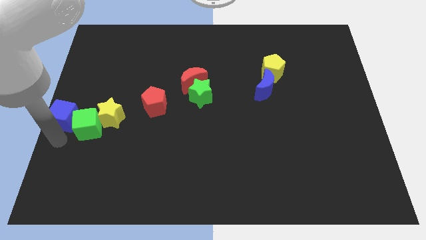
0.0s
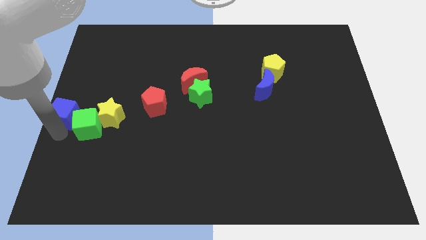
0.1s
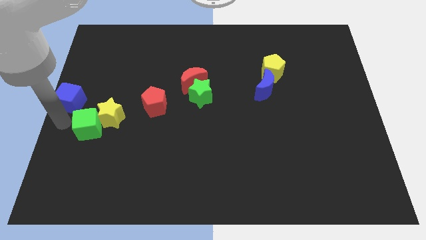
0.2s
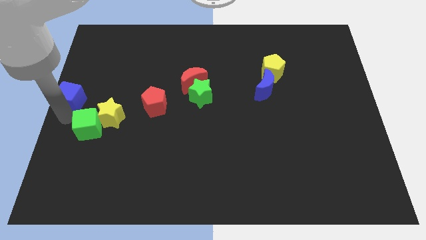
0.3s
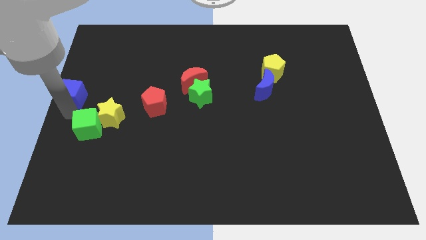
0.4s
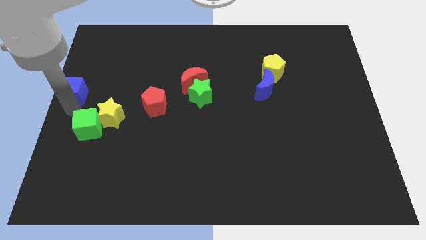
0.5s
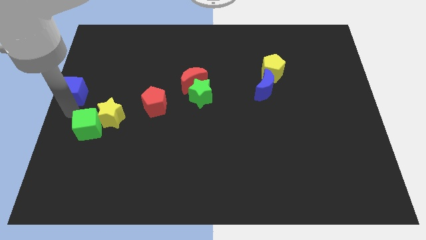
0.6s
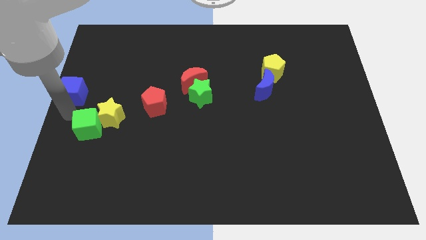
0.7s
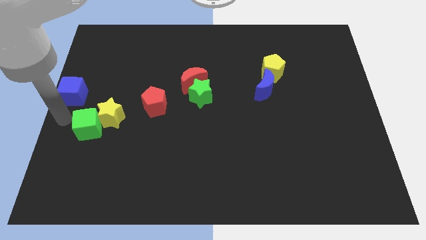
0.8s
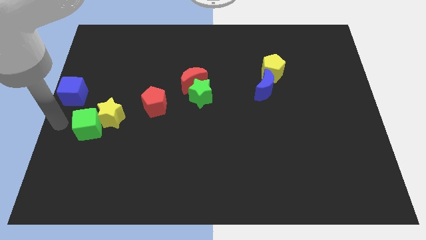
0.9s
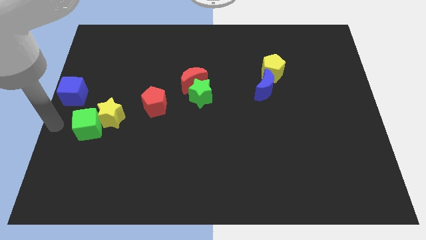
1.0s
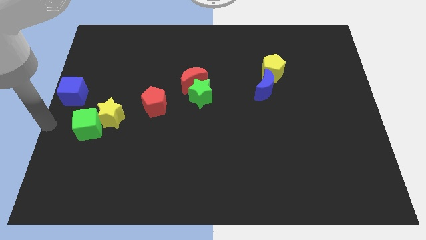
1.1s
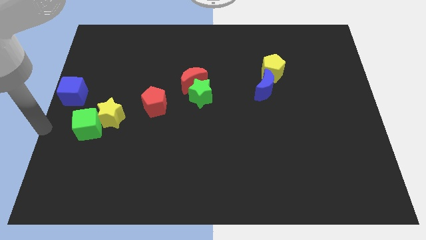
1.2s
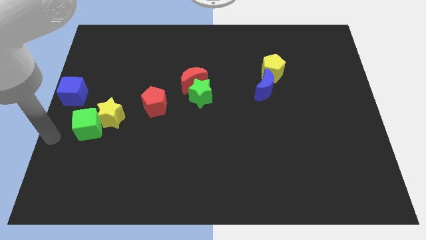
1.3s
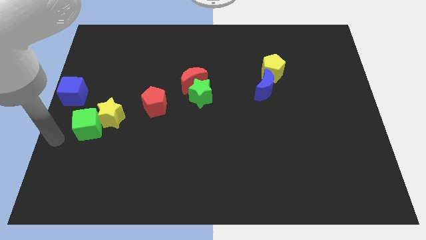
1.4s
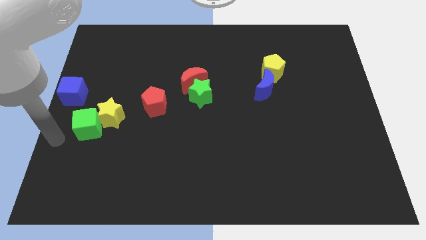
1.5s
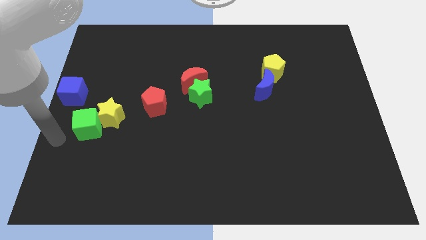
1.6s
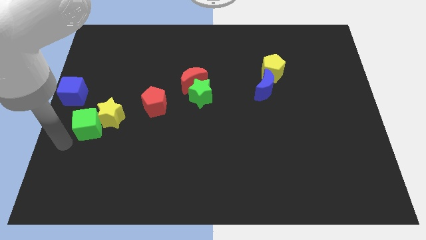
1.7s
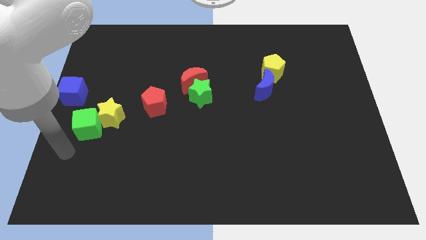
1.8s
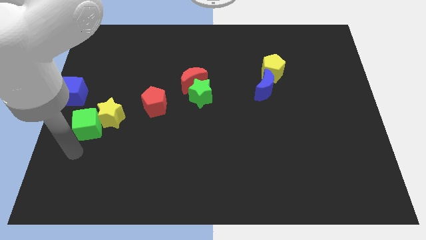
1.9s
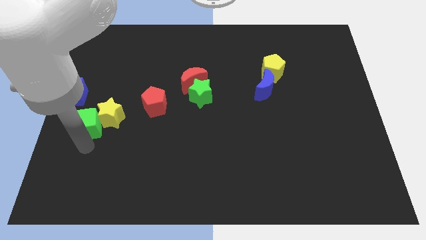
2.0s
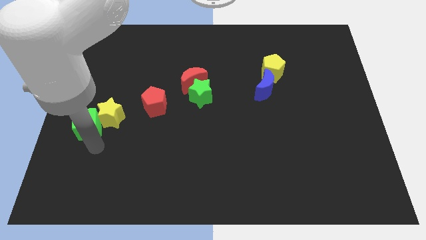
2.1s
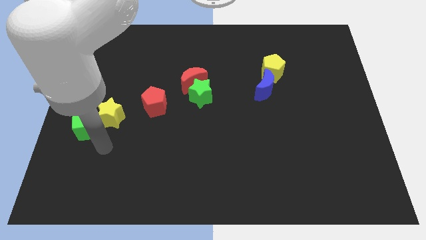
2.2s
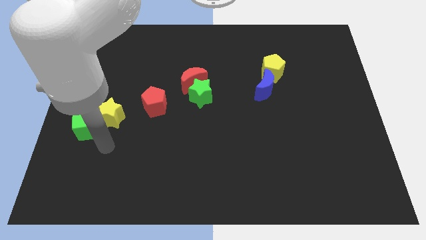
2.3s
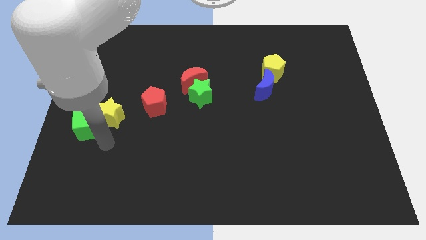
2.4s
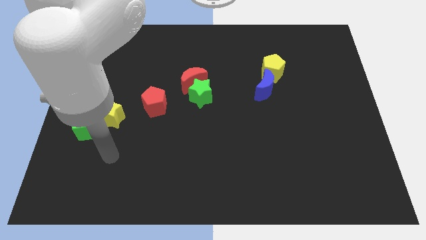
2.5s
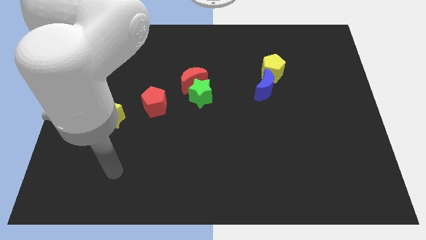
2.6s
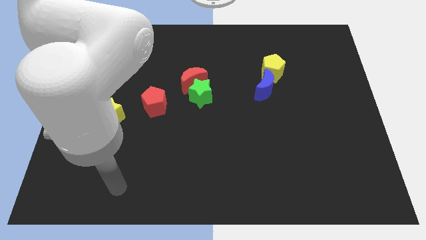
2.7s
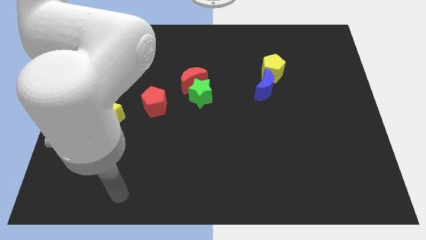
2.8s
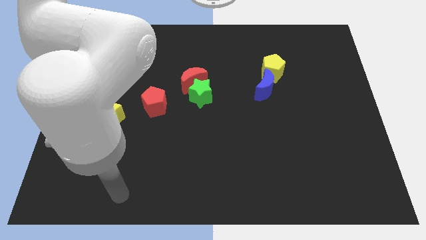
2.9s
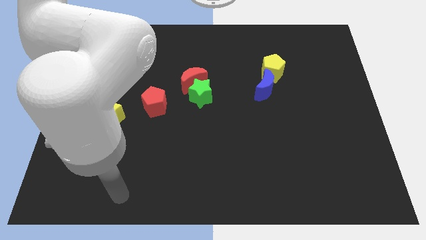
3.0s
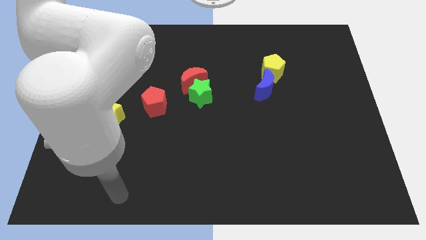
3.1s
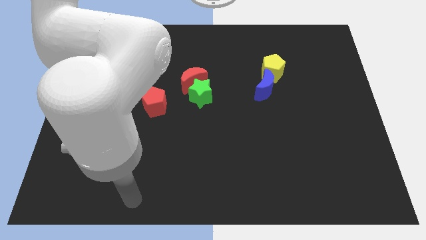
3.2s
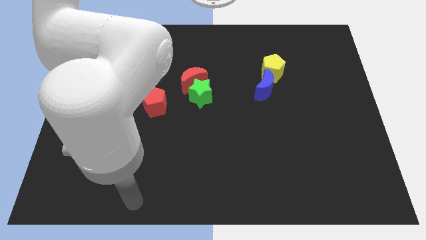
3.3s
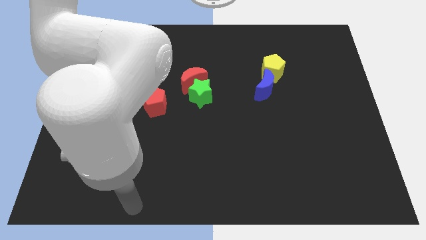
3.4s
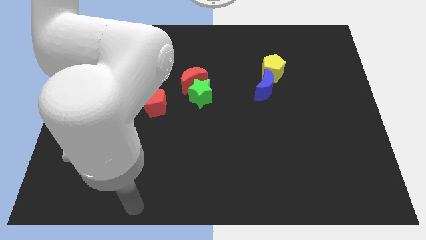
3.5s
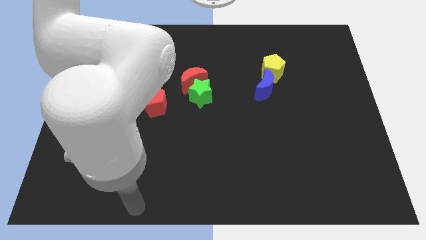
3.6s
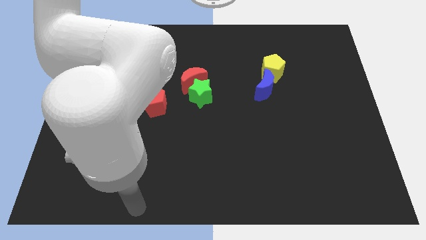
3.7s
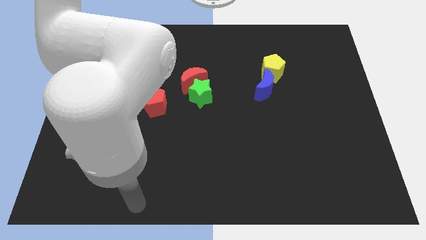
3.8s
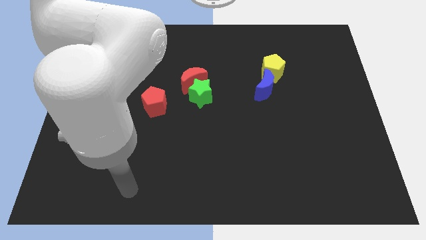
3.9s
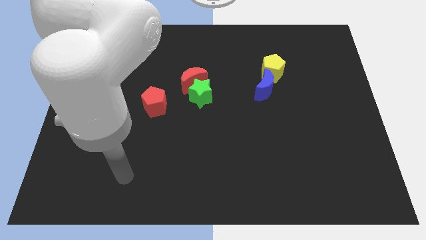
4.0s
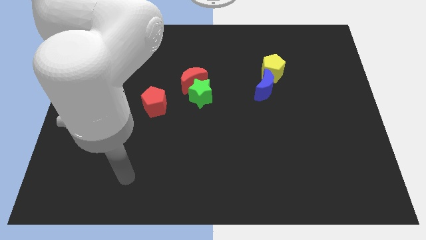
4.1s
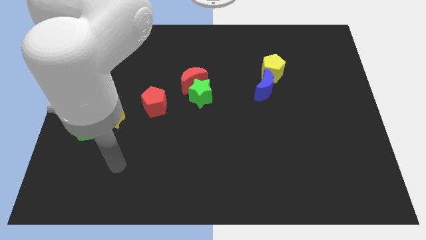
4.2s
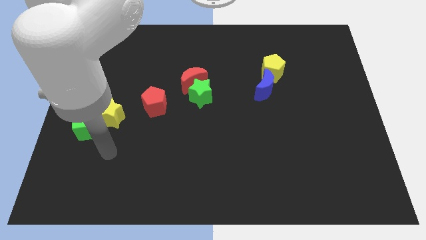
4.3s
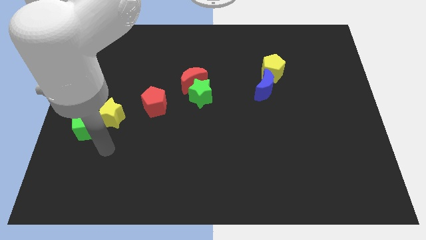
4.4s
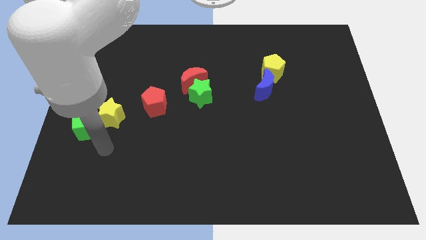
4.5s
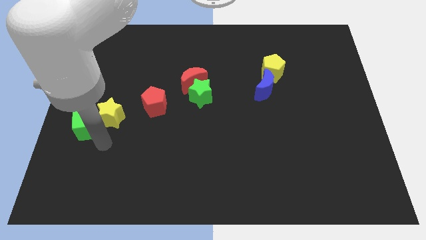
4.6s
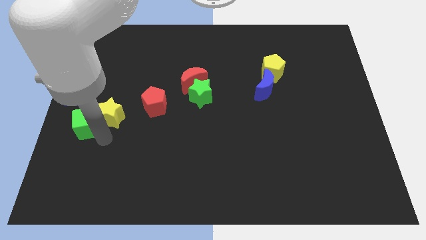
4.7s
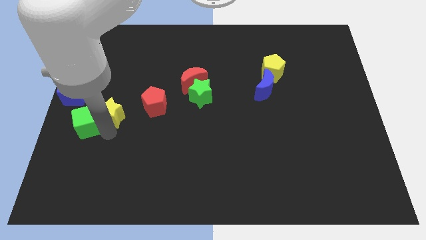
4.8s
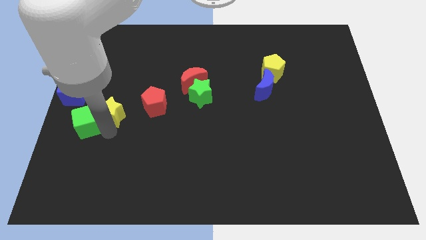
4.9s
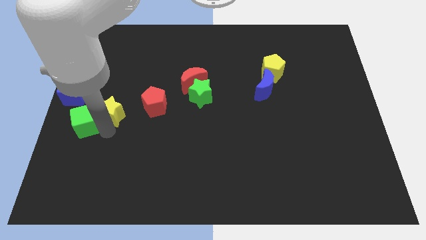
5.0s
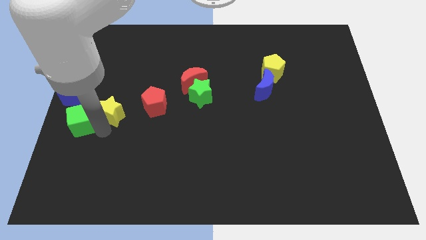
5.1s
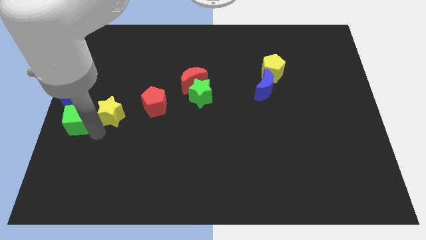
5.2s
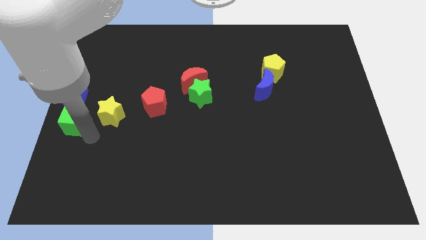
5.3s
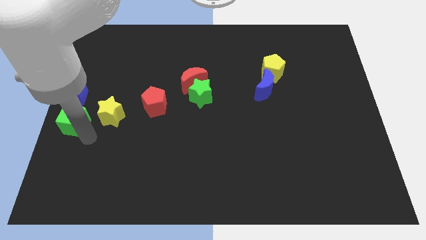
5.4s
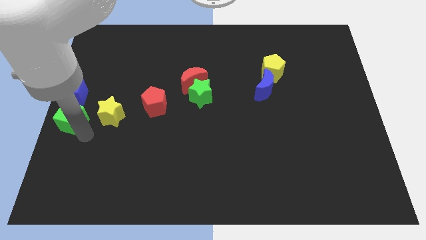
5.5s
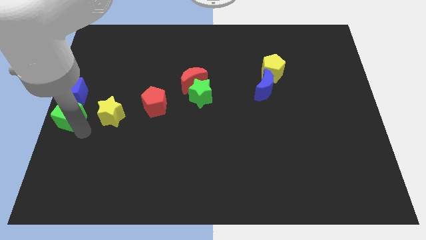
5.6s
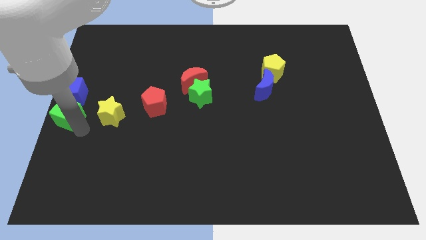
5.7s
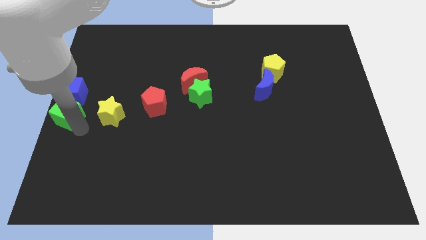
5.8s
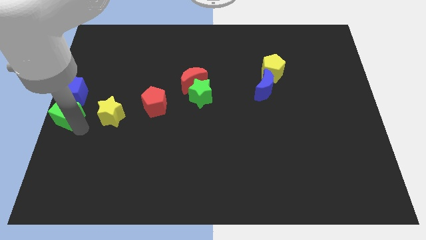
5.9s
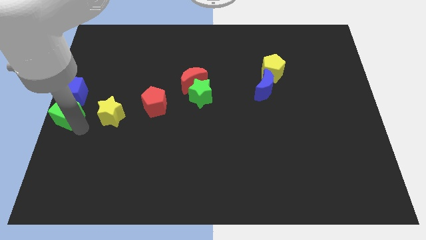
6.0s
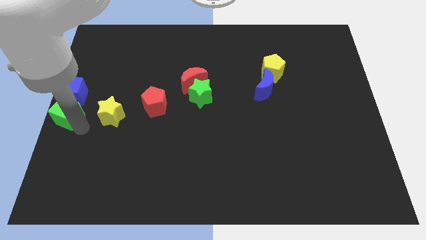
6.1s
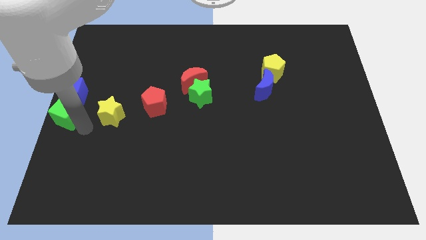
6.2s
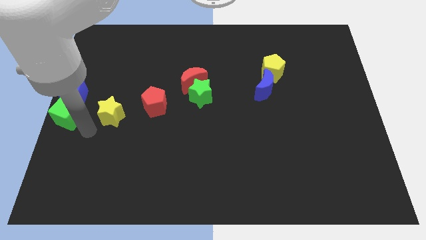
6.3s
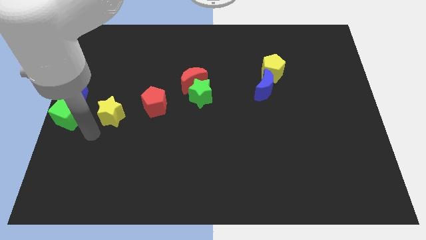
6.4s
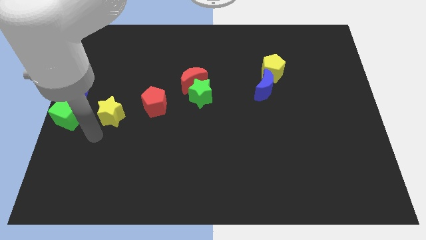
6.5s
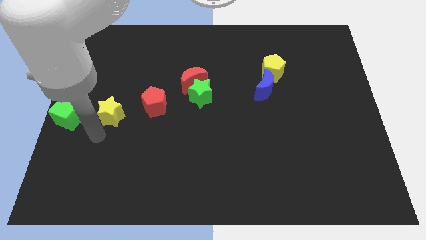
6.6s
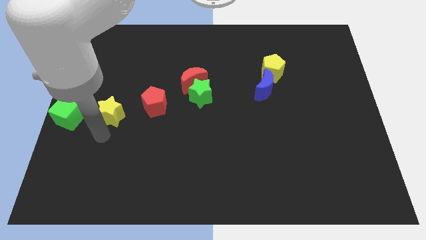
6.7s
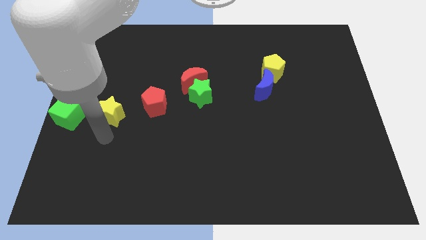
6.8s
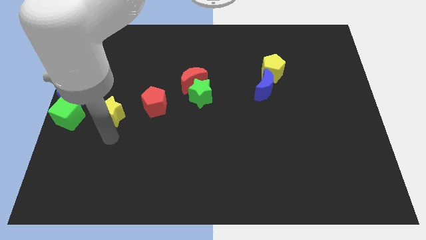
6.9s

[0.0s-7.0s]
push green cube into the blue cube

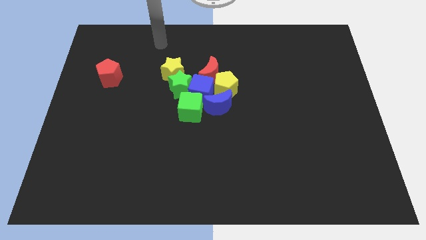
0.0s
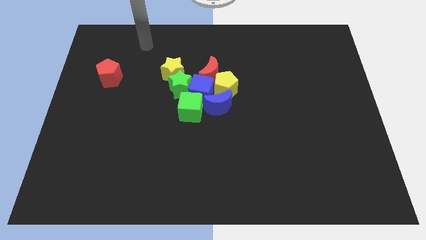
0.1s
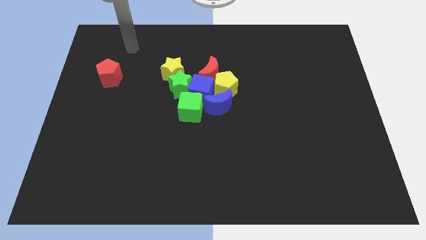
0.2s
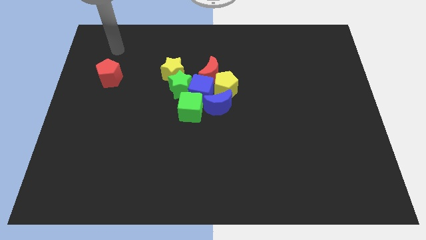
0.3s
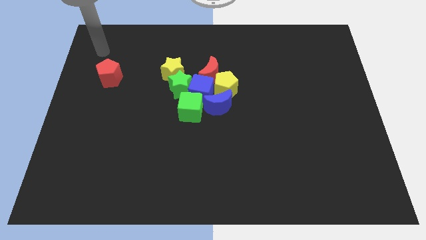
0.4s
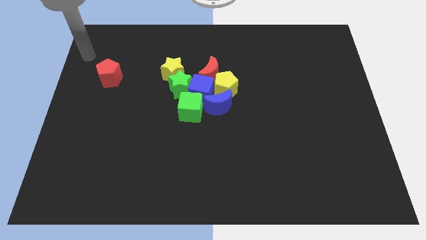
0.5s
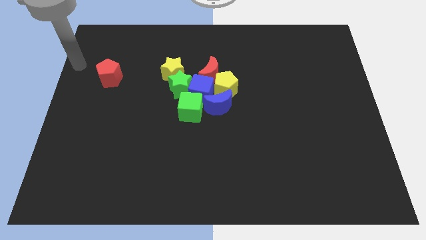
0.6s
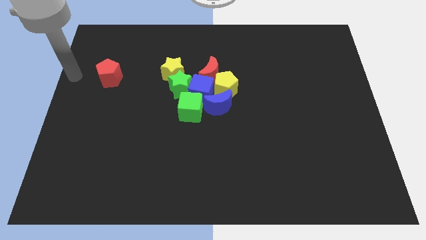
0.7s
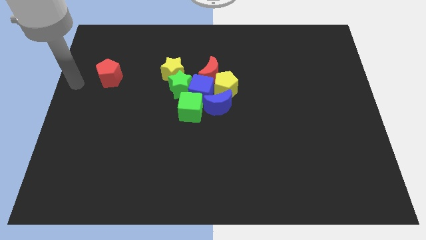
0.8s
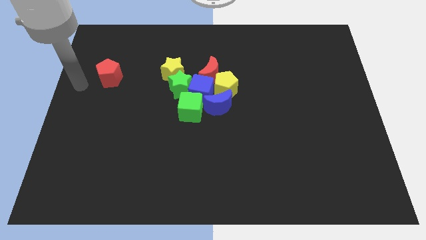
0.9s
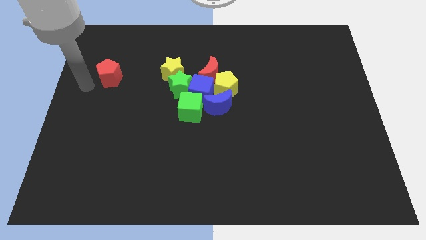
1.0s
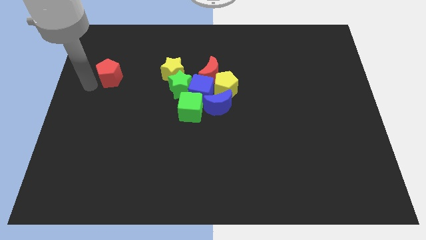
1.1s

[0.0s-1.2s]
slide the red pentagon towards the center

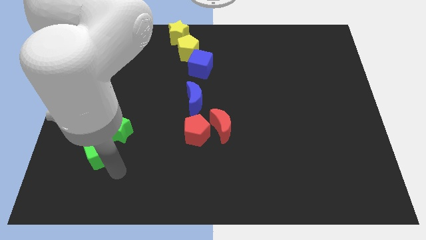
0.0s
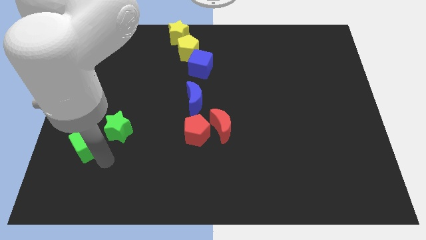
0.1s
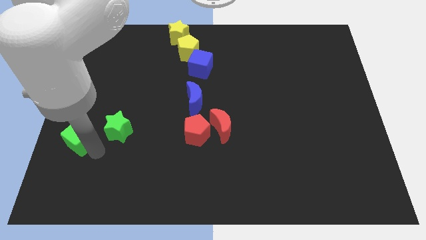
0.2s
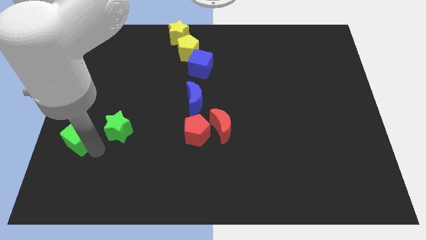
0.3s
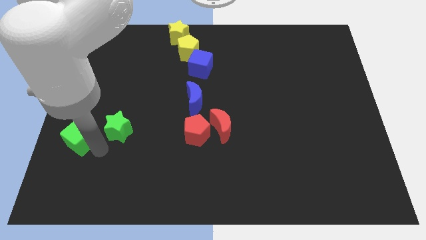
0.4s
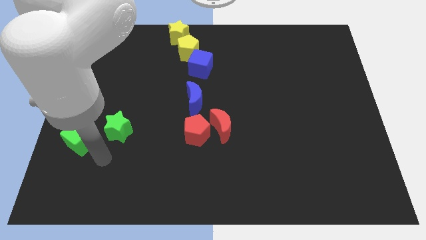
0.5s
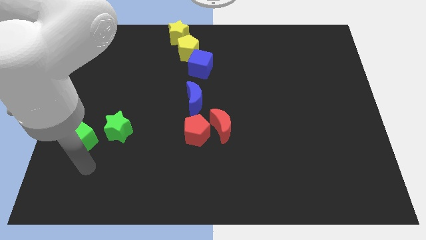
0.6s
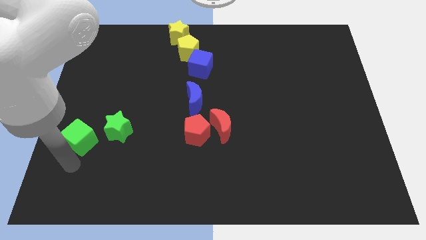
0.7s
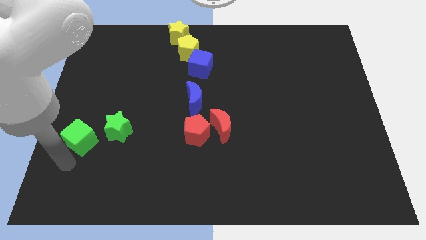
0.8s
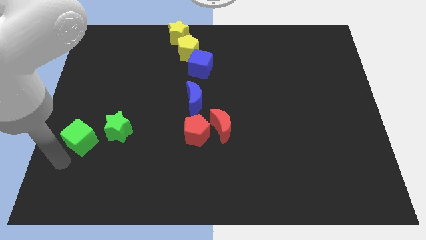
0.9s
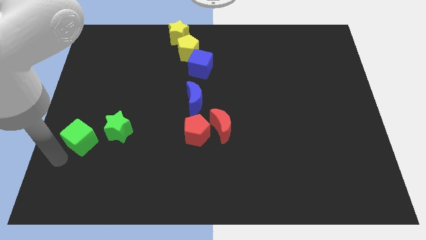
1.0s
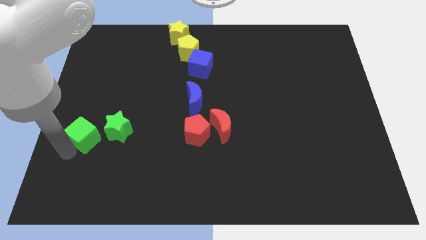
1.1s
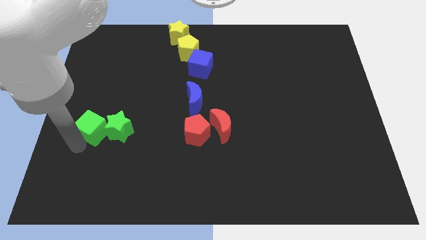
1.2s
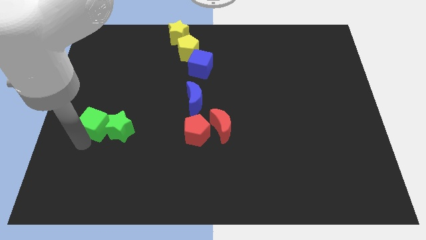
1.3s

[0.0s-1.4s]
place green cube to the left of the green star
